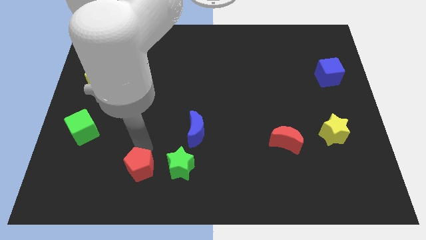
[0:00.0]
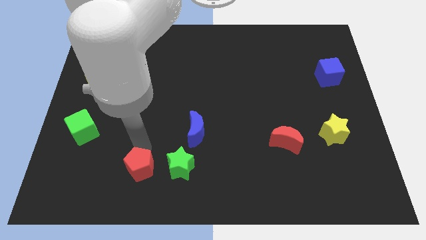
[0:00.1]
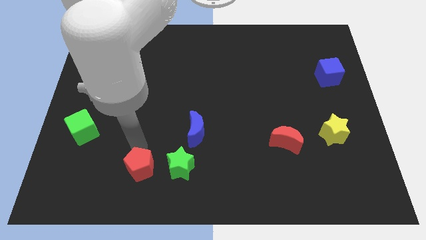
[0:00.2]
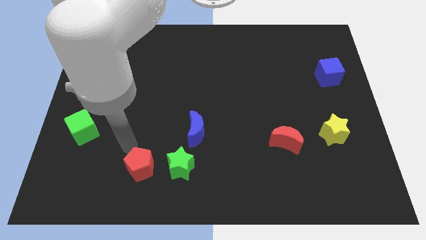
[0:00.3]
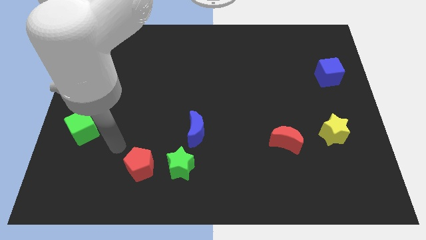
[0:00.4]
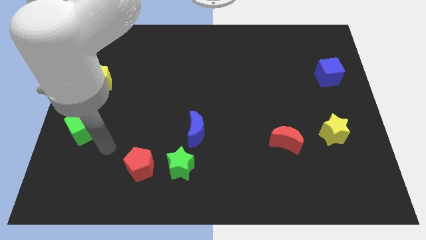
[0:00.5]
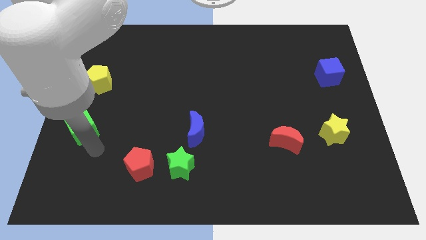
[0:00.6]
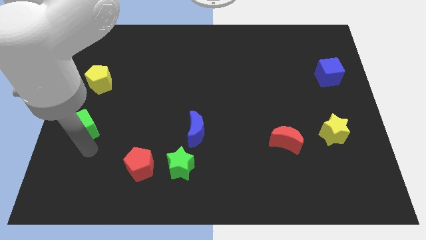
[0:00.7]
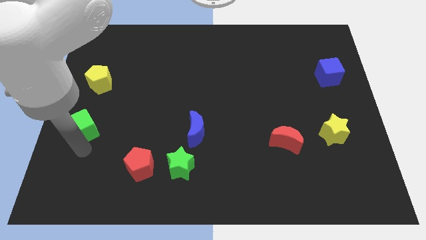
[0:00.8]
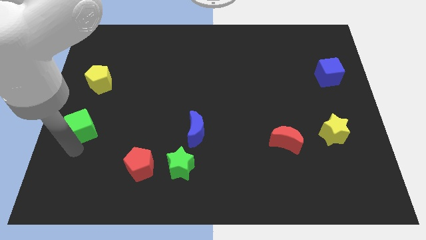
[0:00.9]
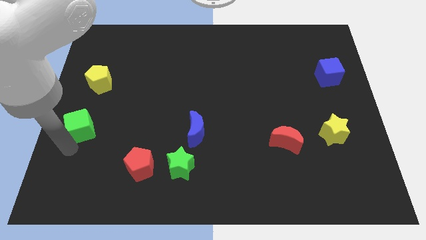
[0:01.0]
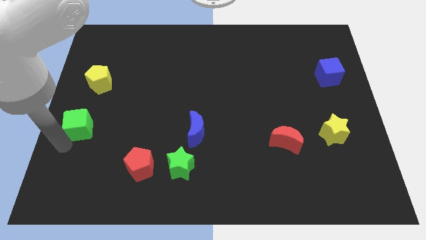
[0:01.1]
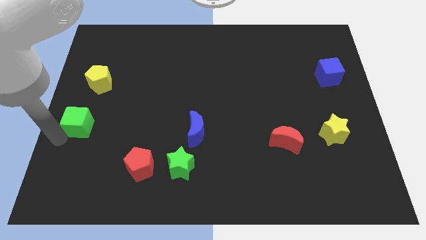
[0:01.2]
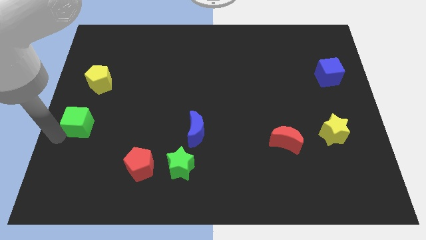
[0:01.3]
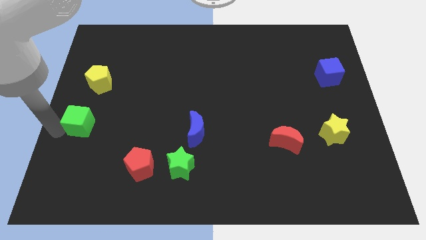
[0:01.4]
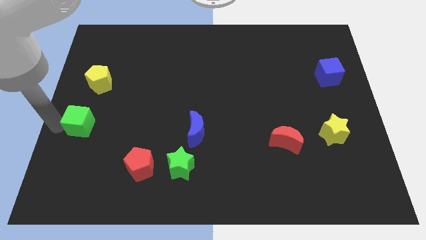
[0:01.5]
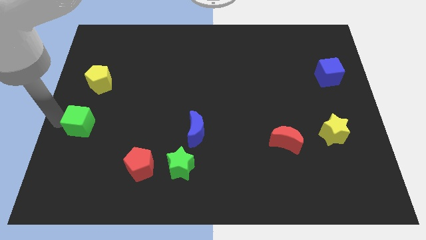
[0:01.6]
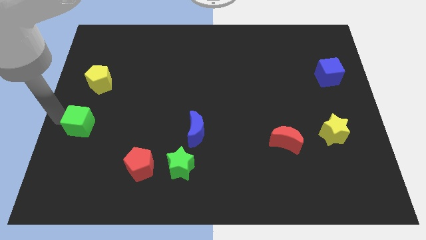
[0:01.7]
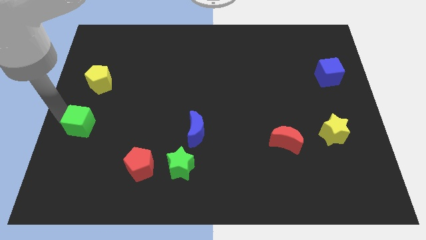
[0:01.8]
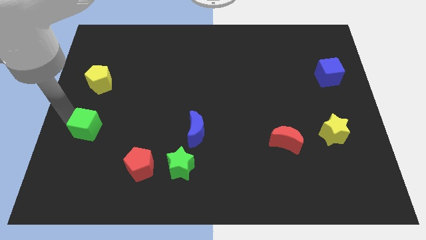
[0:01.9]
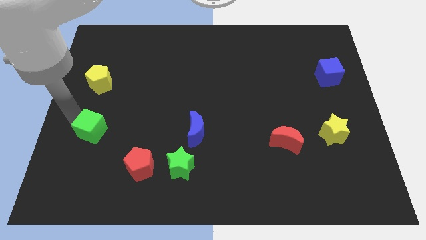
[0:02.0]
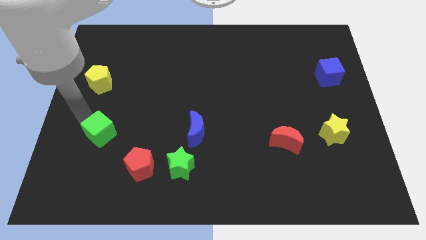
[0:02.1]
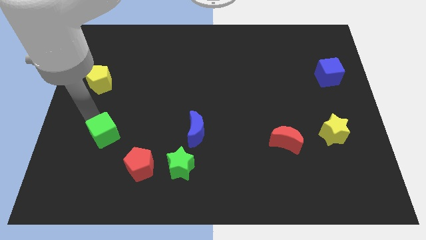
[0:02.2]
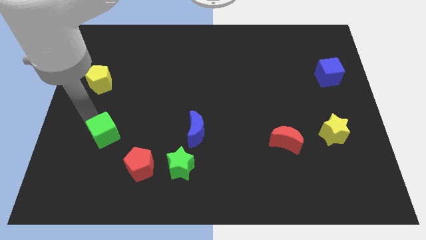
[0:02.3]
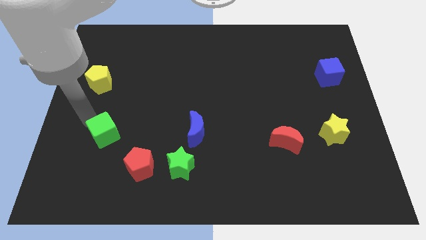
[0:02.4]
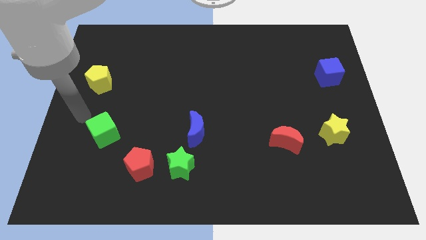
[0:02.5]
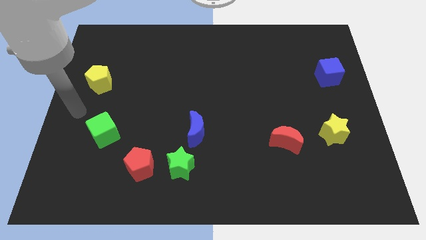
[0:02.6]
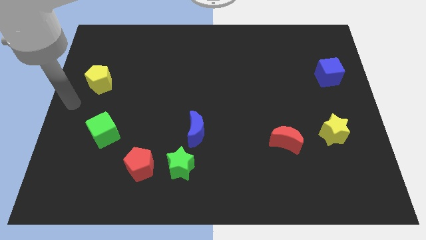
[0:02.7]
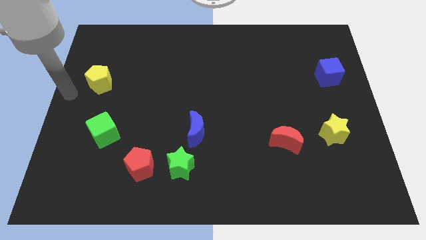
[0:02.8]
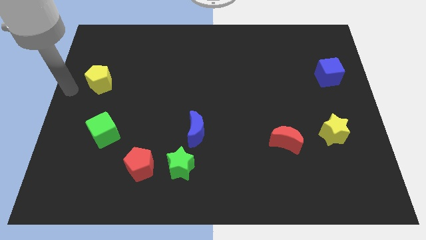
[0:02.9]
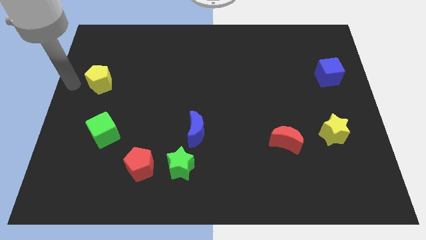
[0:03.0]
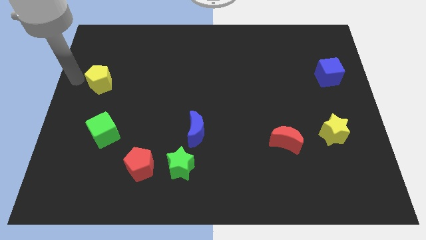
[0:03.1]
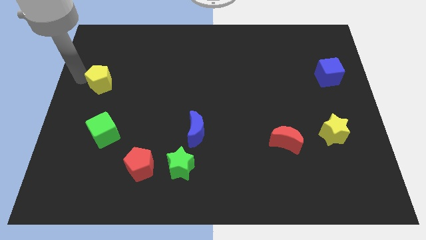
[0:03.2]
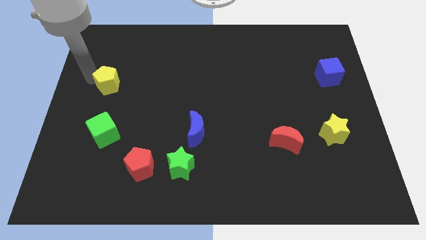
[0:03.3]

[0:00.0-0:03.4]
place the green cube to the top of the red pentagon

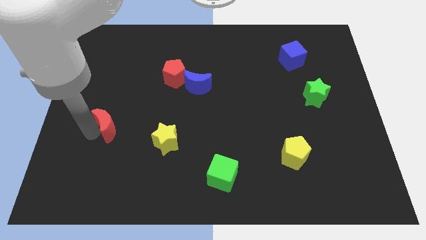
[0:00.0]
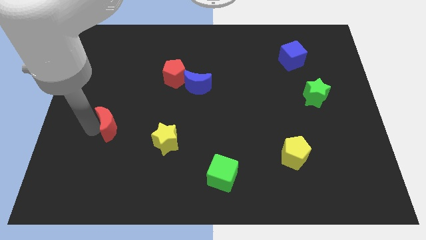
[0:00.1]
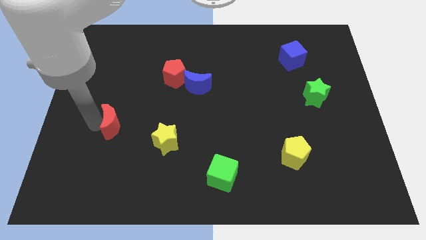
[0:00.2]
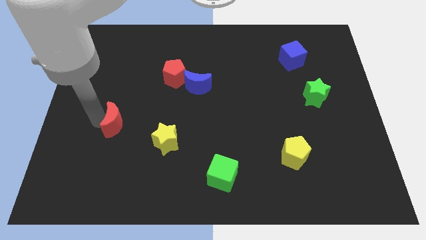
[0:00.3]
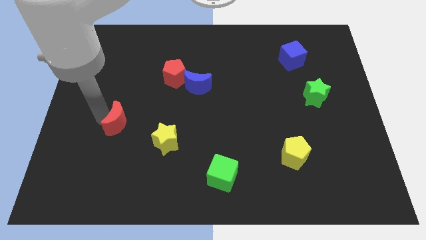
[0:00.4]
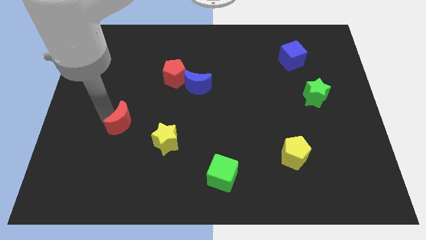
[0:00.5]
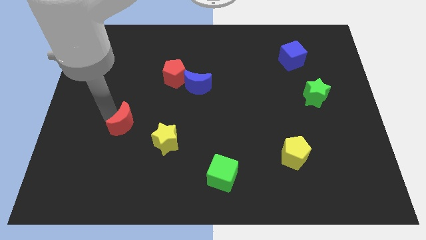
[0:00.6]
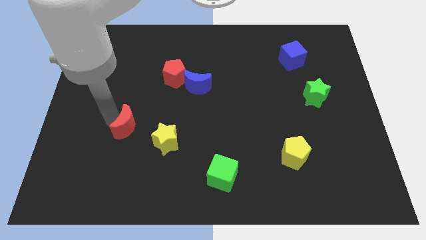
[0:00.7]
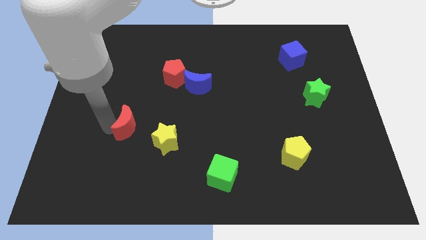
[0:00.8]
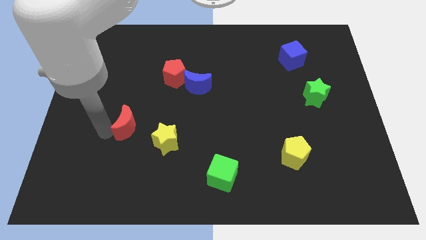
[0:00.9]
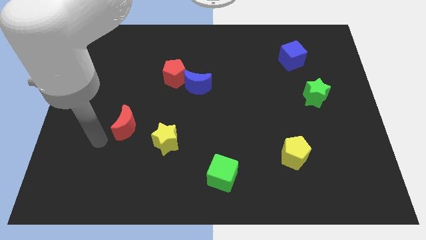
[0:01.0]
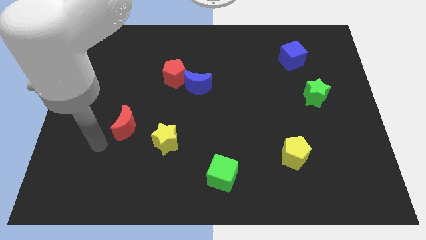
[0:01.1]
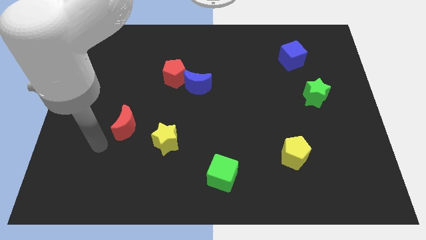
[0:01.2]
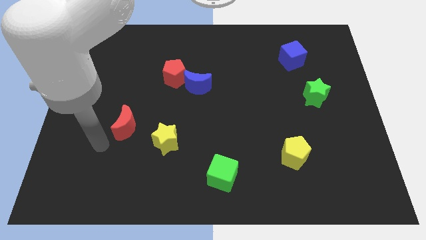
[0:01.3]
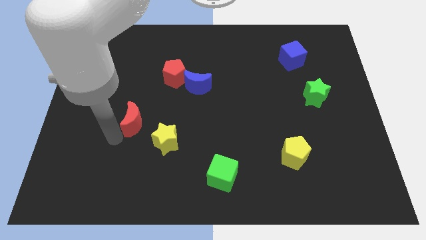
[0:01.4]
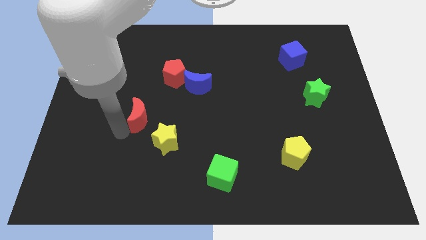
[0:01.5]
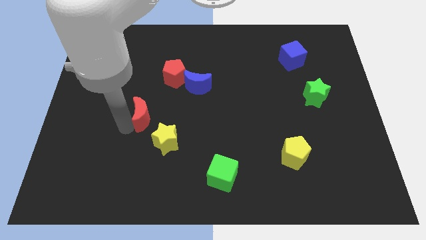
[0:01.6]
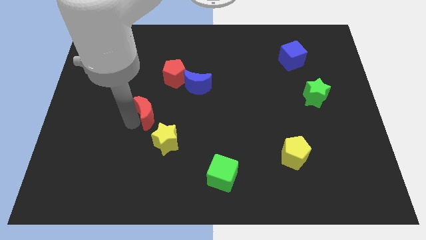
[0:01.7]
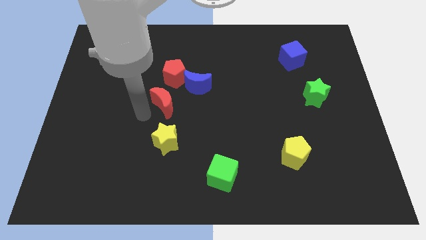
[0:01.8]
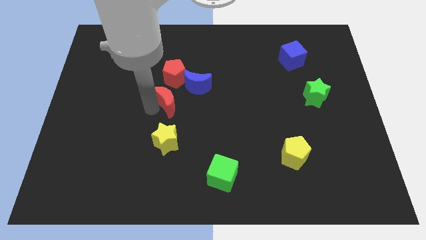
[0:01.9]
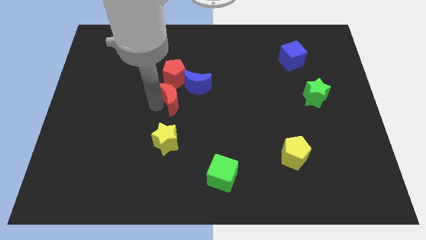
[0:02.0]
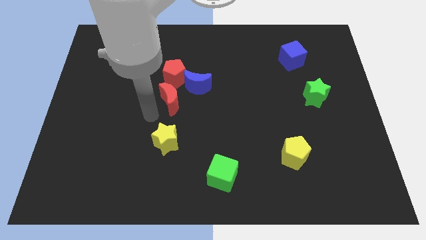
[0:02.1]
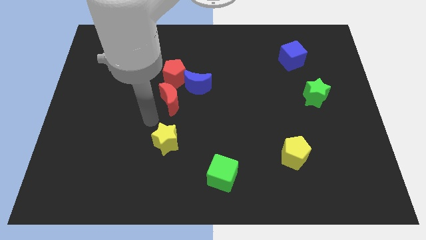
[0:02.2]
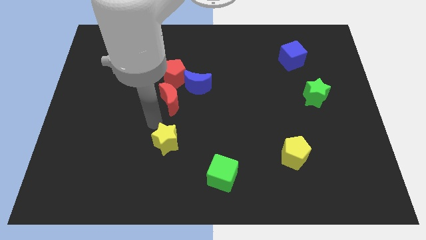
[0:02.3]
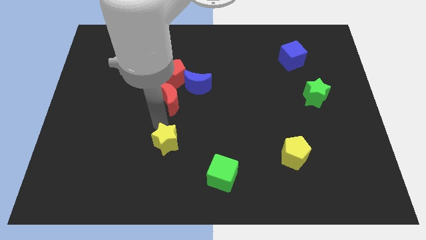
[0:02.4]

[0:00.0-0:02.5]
place red moon to the bottom of red pentagon

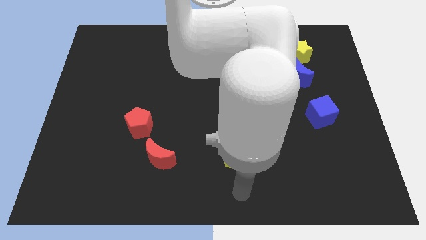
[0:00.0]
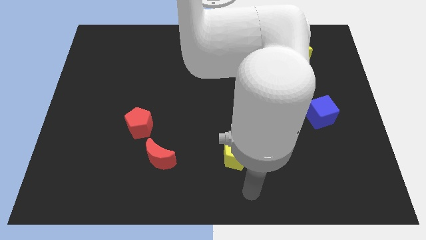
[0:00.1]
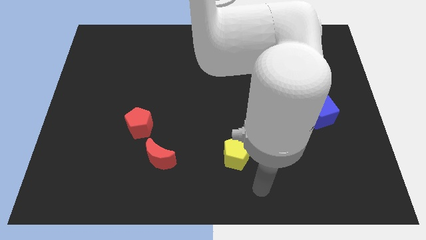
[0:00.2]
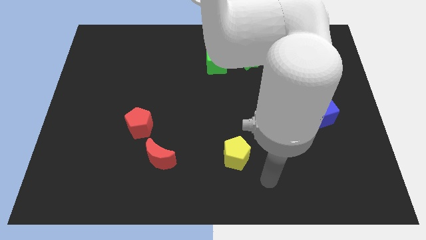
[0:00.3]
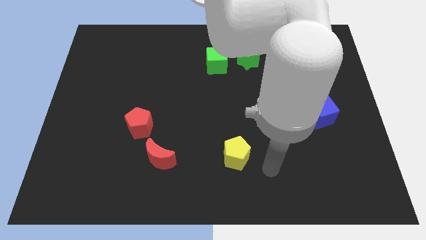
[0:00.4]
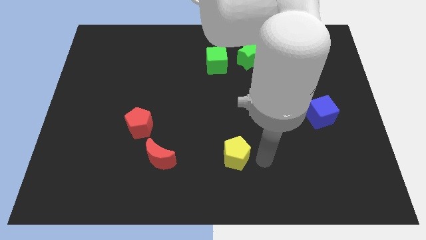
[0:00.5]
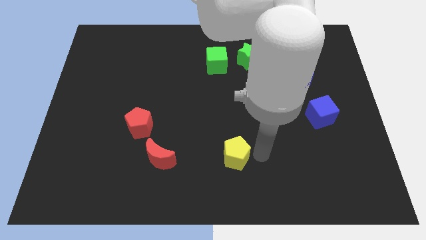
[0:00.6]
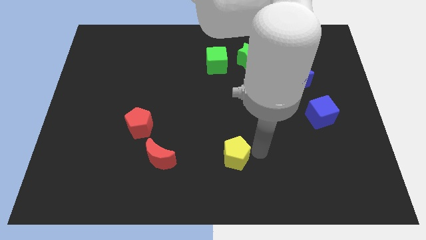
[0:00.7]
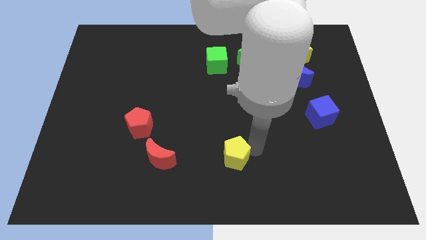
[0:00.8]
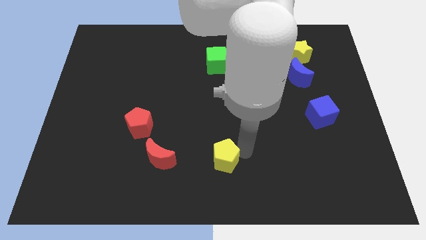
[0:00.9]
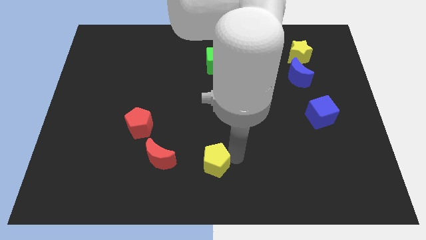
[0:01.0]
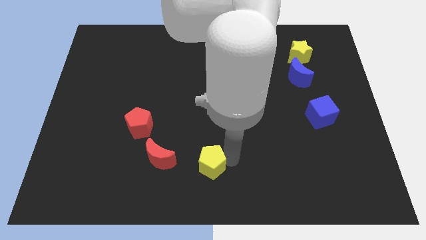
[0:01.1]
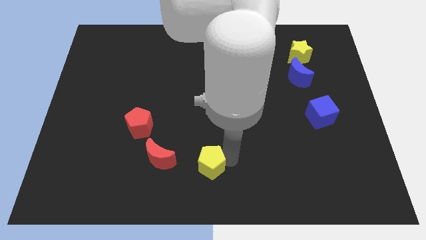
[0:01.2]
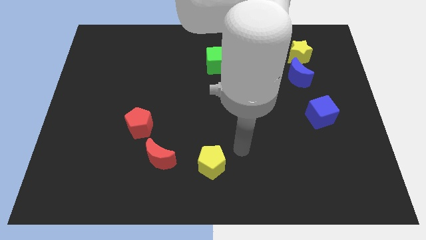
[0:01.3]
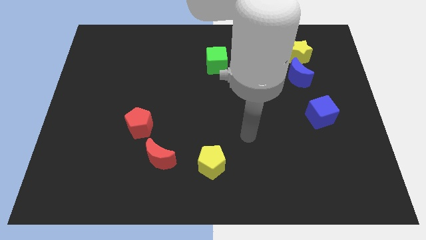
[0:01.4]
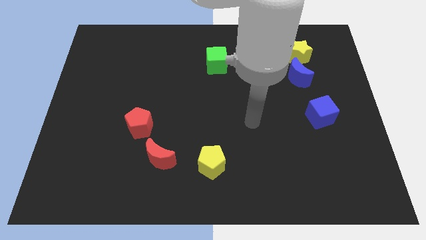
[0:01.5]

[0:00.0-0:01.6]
move yellow pentagon towards red moon

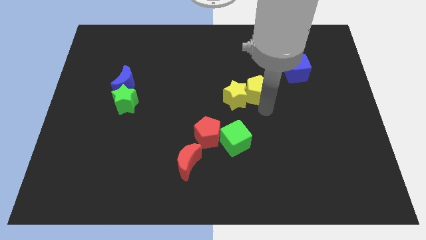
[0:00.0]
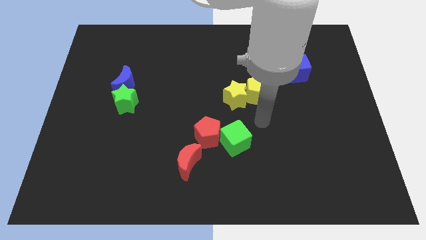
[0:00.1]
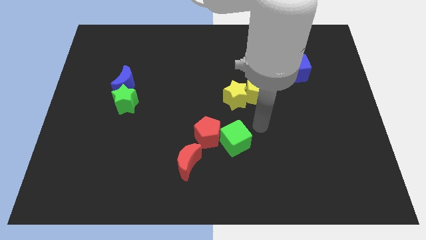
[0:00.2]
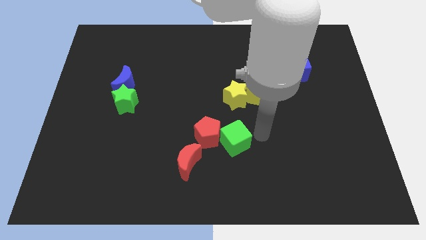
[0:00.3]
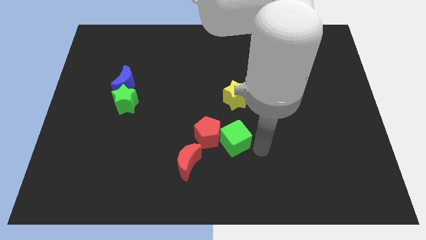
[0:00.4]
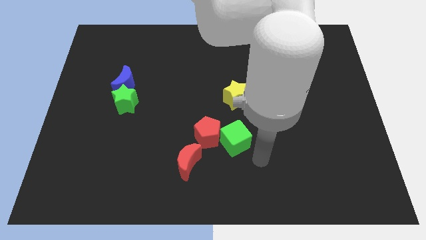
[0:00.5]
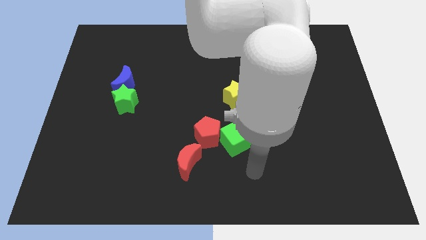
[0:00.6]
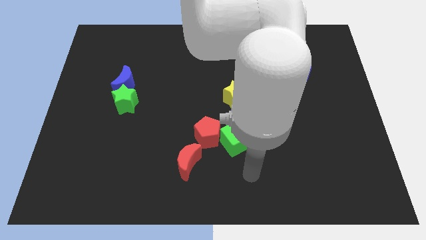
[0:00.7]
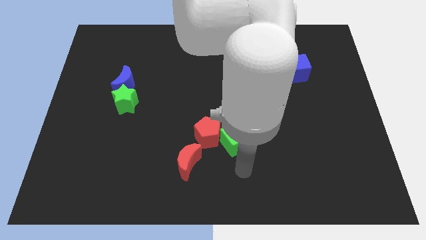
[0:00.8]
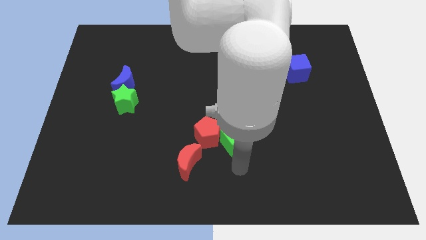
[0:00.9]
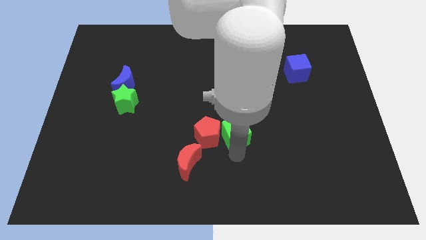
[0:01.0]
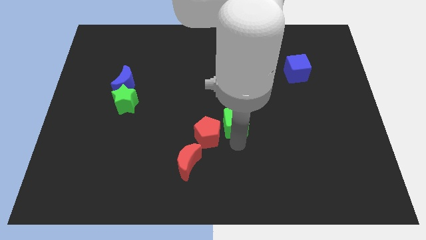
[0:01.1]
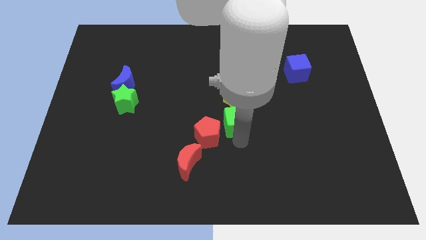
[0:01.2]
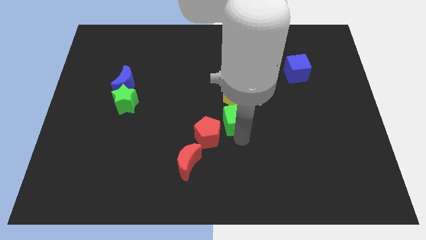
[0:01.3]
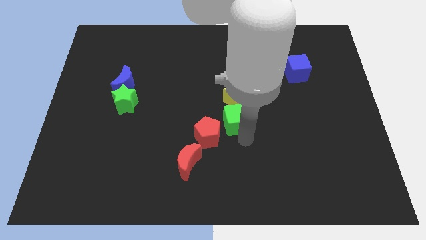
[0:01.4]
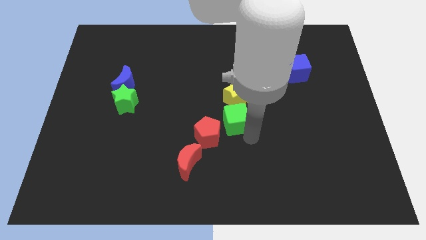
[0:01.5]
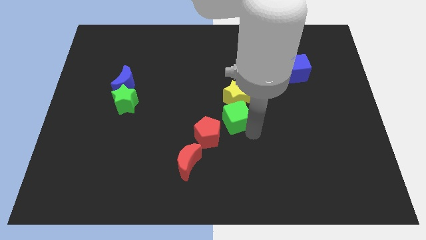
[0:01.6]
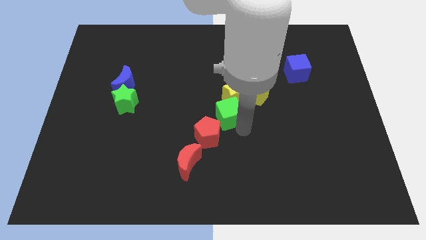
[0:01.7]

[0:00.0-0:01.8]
push the green cube down to the yellow star
